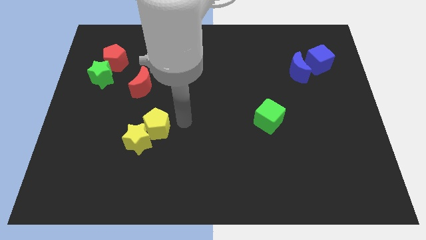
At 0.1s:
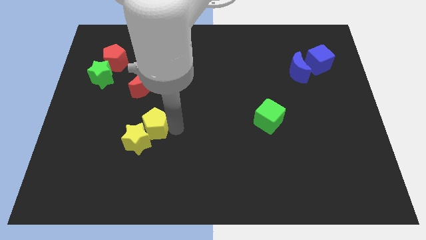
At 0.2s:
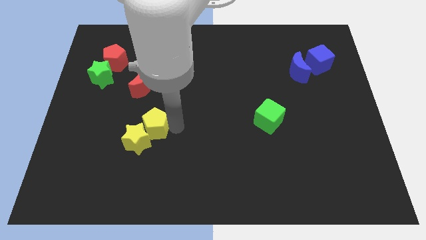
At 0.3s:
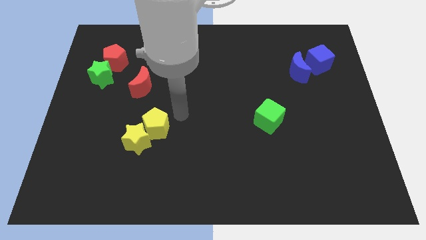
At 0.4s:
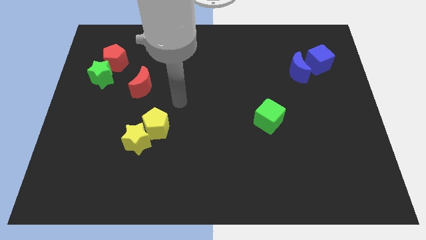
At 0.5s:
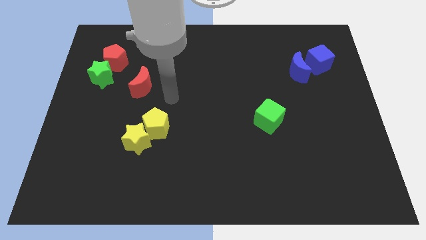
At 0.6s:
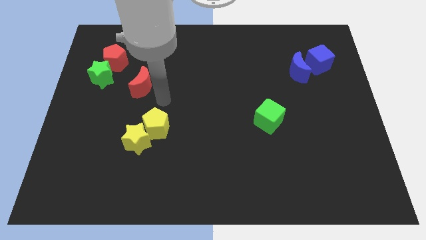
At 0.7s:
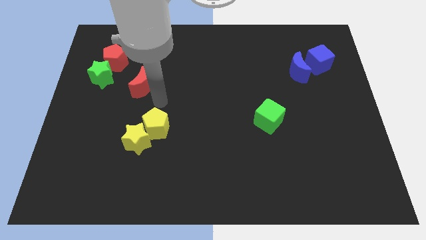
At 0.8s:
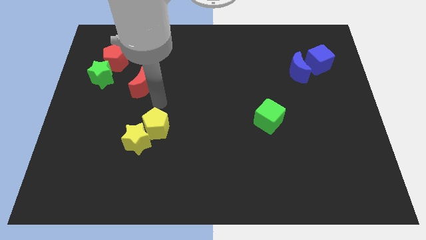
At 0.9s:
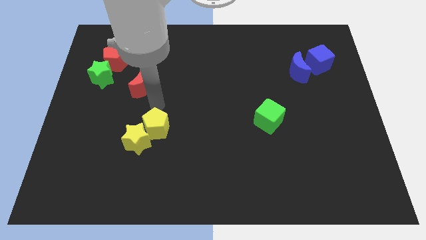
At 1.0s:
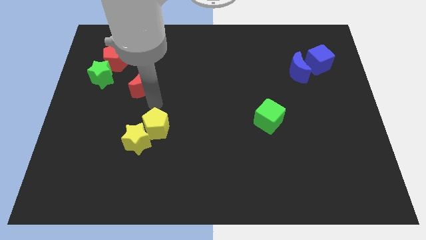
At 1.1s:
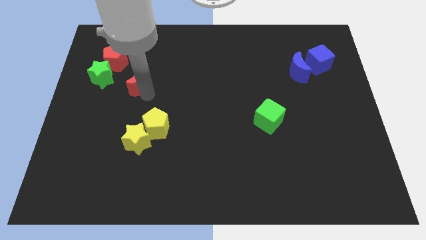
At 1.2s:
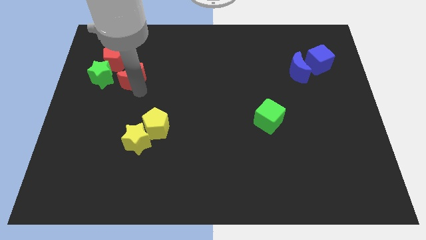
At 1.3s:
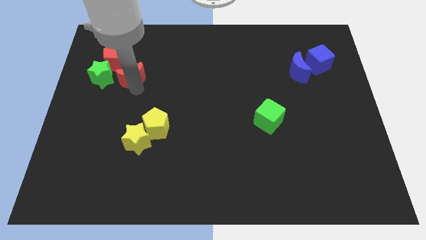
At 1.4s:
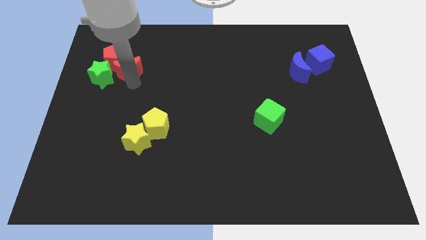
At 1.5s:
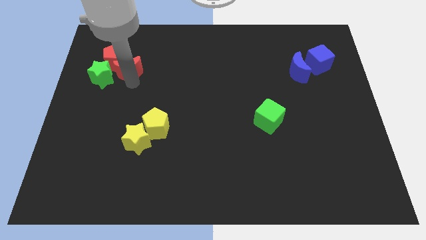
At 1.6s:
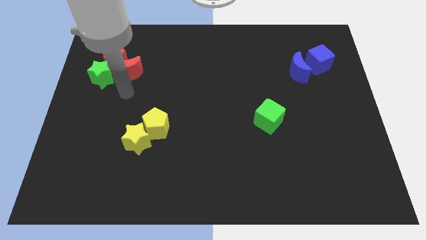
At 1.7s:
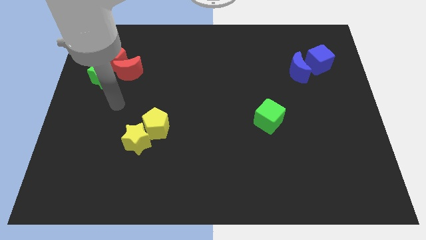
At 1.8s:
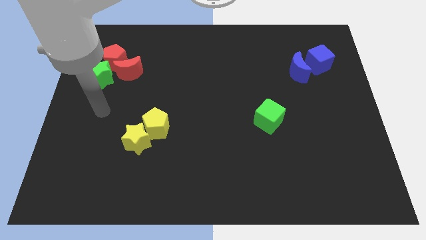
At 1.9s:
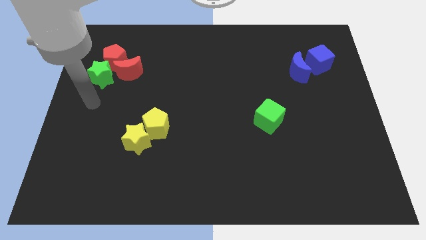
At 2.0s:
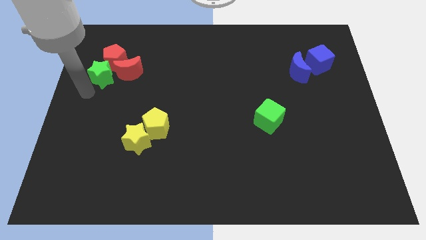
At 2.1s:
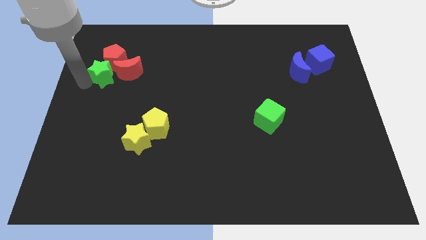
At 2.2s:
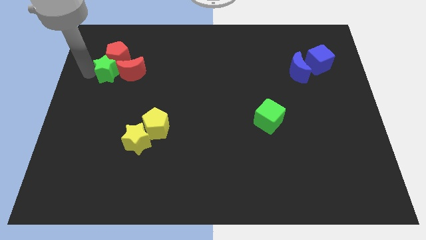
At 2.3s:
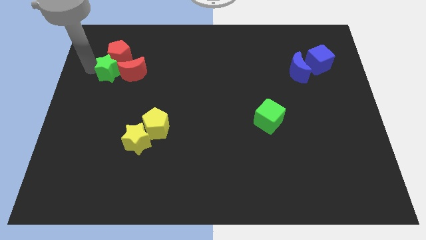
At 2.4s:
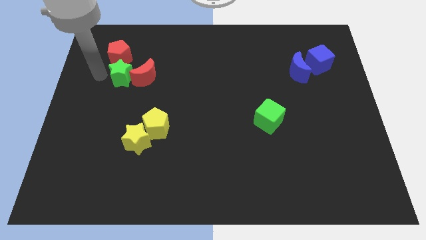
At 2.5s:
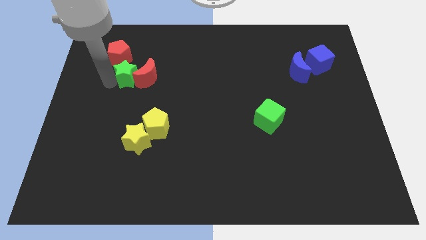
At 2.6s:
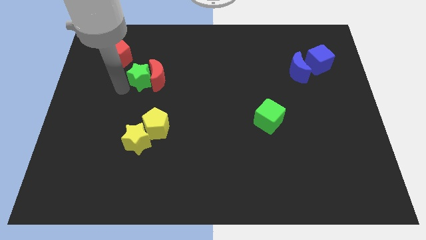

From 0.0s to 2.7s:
push the red moon into the red pentagon

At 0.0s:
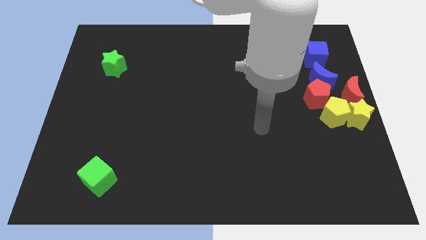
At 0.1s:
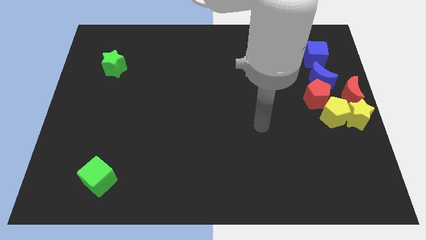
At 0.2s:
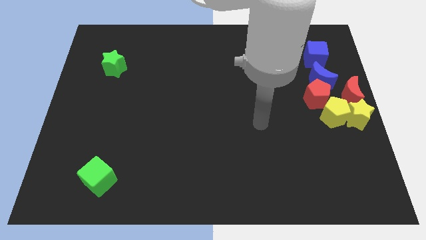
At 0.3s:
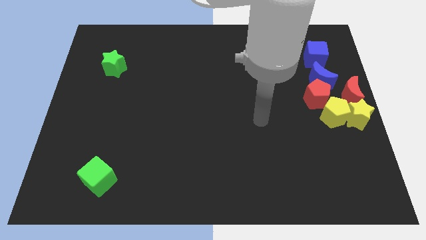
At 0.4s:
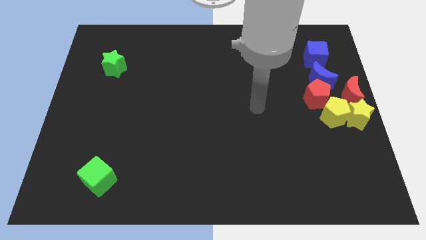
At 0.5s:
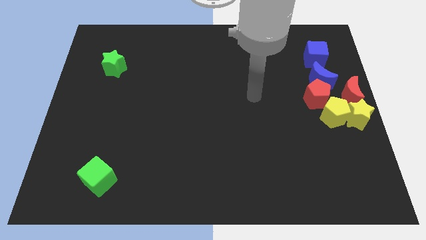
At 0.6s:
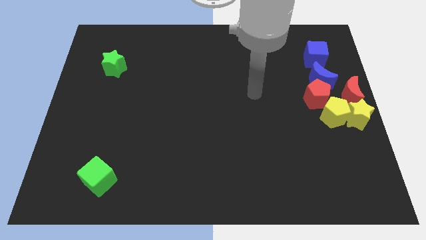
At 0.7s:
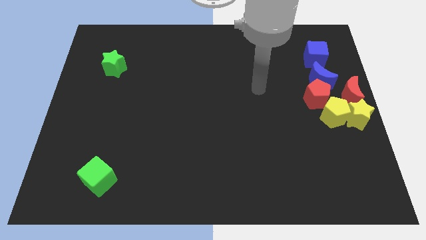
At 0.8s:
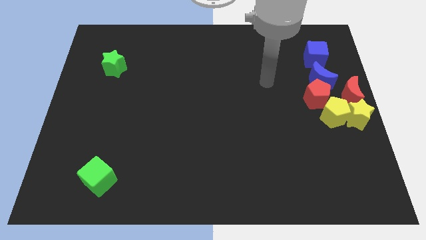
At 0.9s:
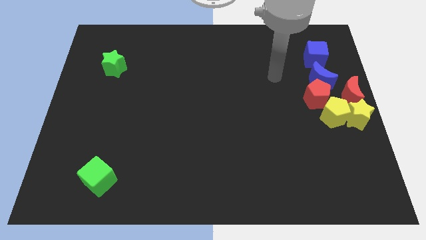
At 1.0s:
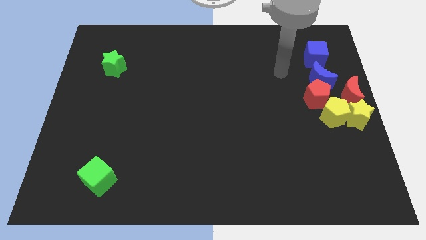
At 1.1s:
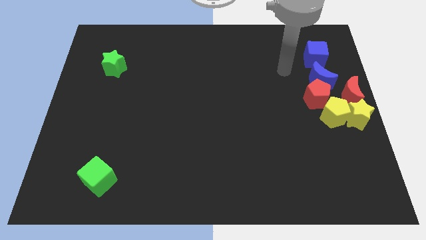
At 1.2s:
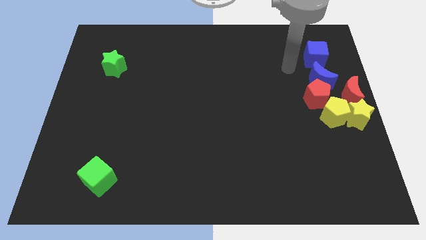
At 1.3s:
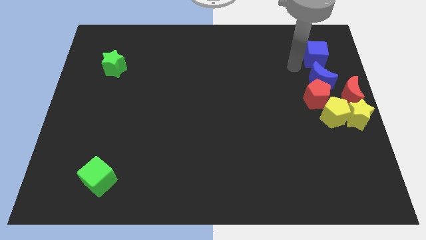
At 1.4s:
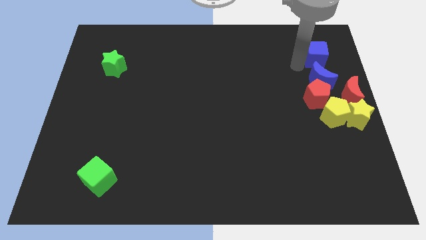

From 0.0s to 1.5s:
place your arm to the bottom left of the blue cube

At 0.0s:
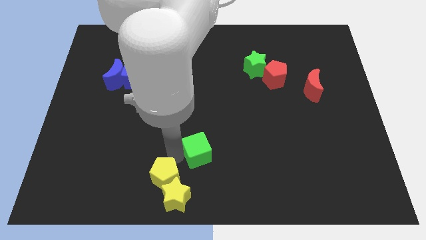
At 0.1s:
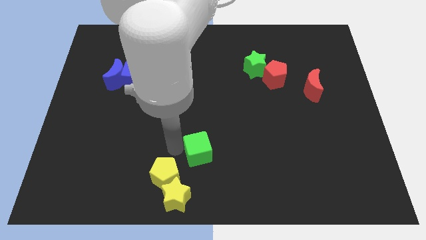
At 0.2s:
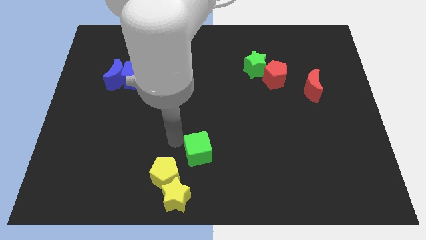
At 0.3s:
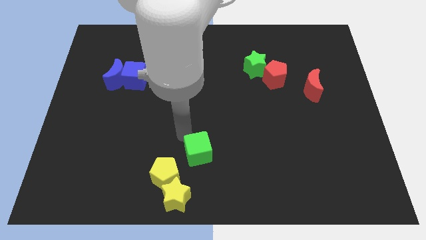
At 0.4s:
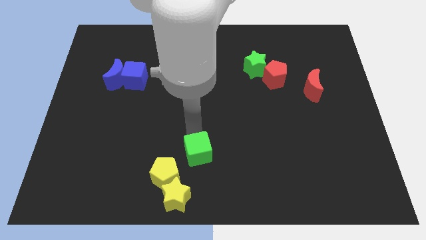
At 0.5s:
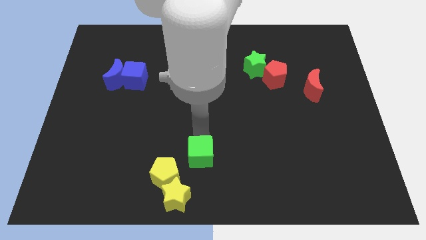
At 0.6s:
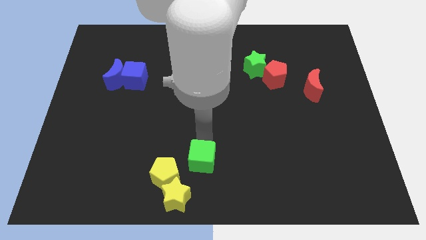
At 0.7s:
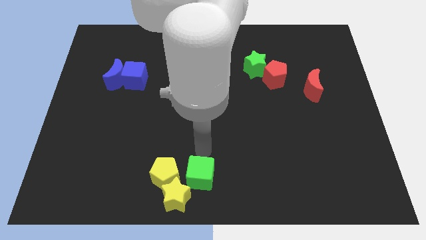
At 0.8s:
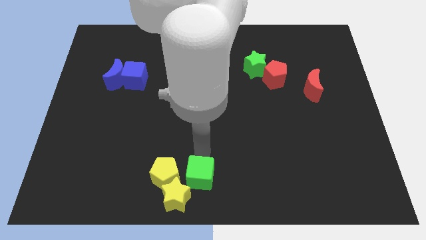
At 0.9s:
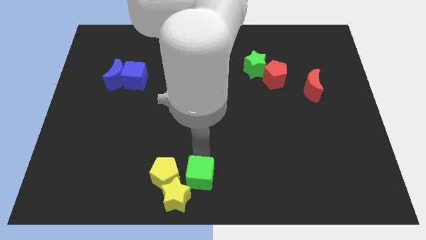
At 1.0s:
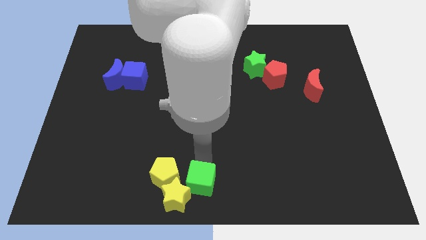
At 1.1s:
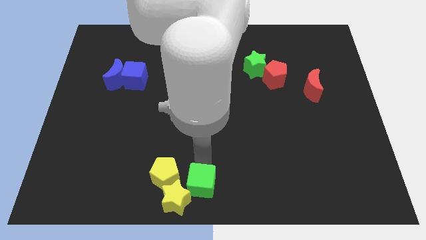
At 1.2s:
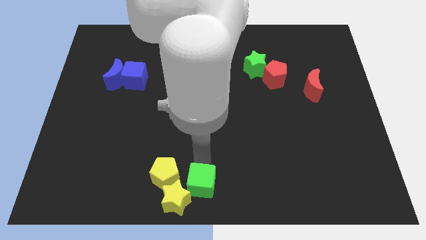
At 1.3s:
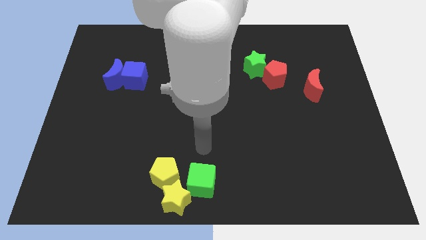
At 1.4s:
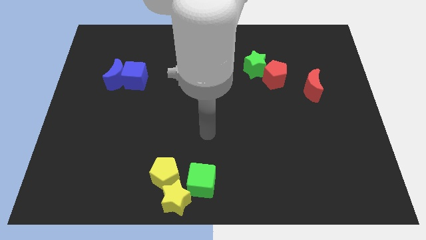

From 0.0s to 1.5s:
push green cube in to yellow star

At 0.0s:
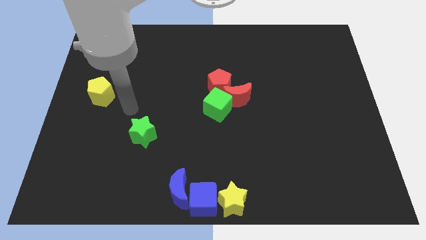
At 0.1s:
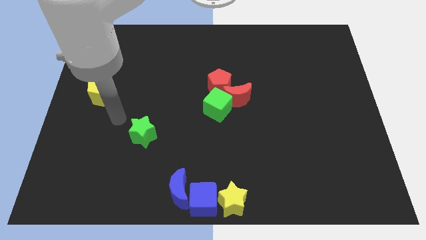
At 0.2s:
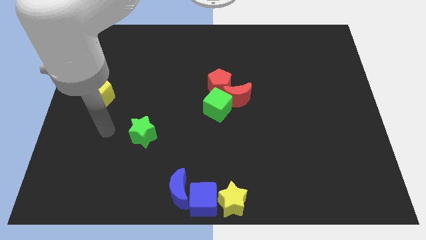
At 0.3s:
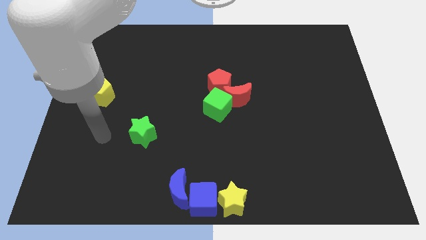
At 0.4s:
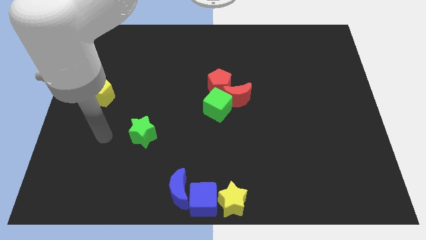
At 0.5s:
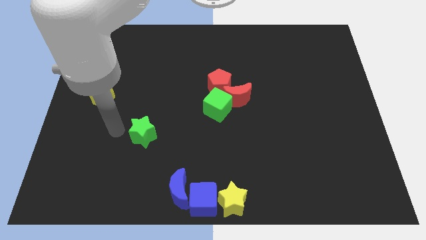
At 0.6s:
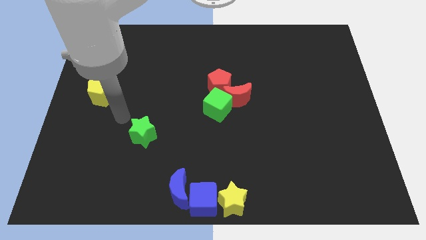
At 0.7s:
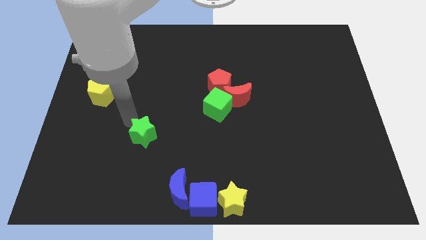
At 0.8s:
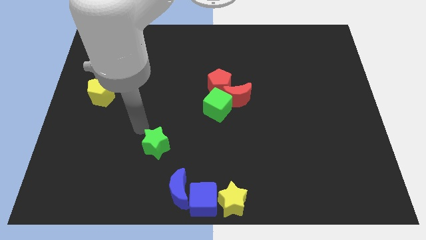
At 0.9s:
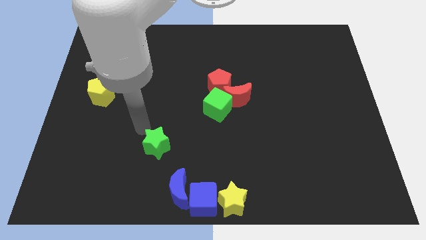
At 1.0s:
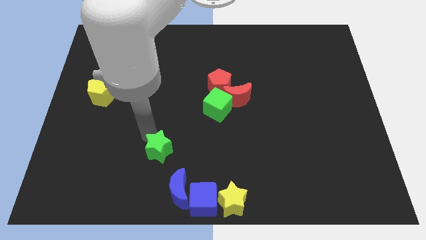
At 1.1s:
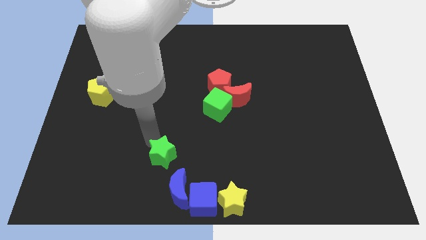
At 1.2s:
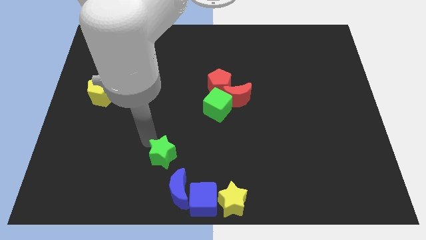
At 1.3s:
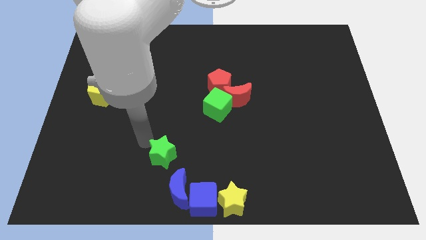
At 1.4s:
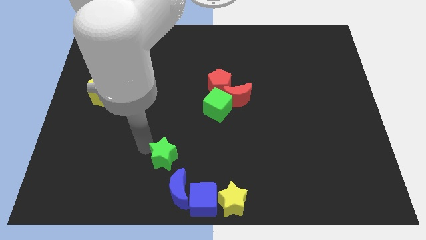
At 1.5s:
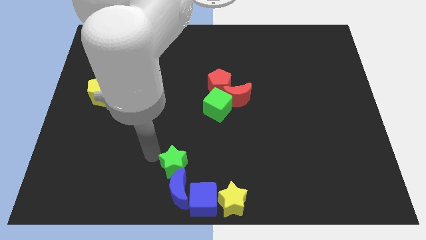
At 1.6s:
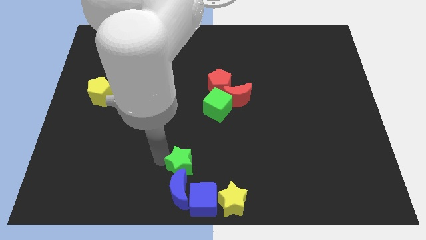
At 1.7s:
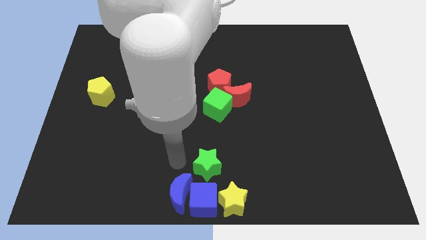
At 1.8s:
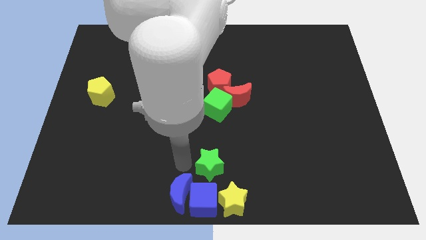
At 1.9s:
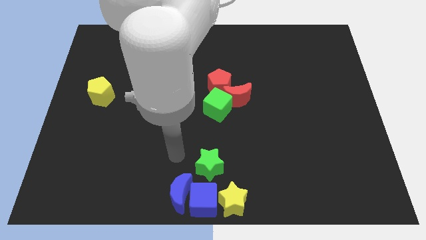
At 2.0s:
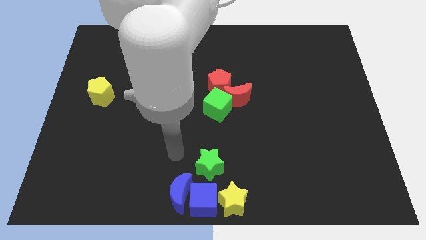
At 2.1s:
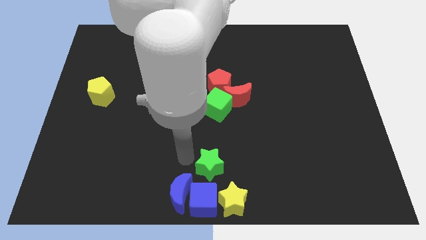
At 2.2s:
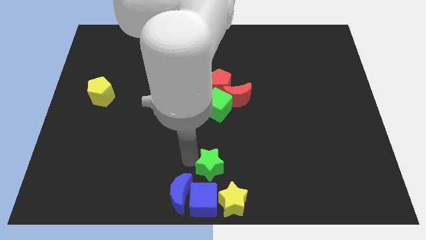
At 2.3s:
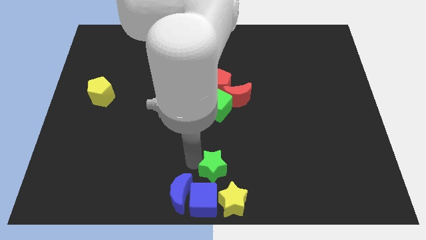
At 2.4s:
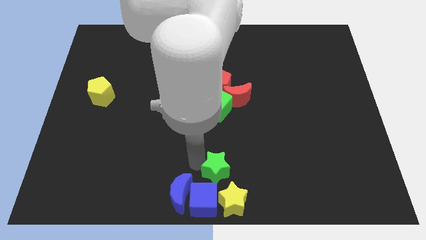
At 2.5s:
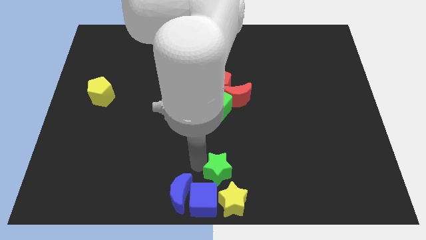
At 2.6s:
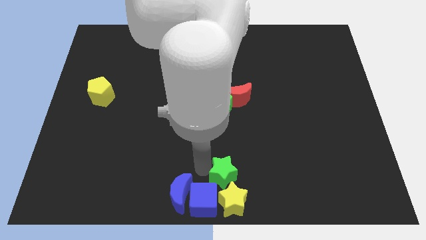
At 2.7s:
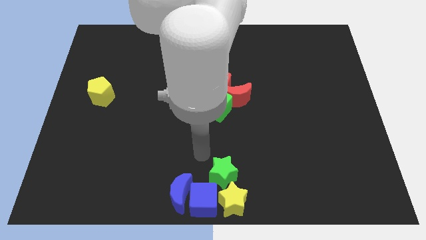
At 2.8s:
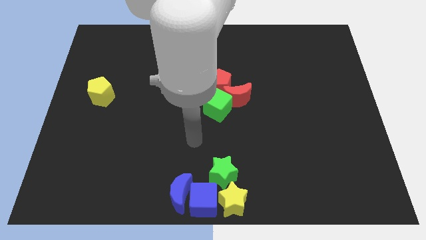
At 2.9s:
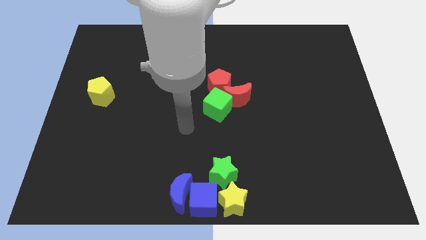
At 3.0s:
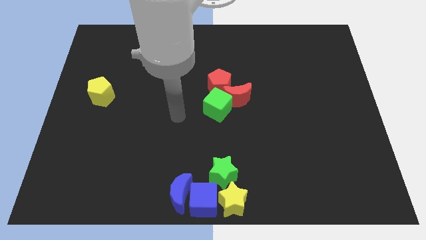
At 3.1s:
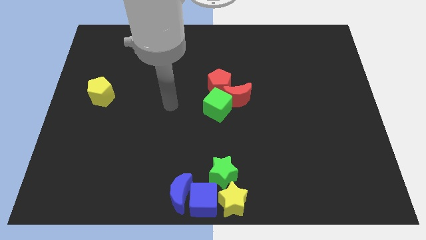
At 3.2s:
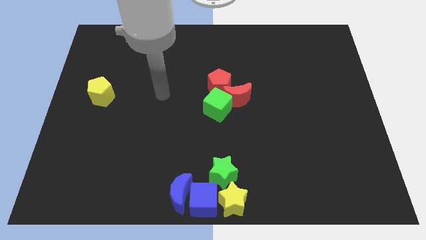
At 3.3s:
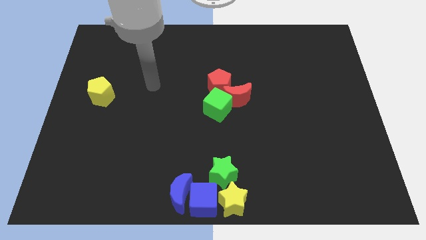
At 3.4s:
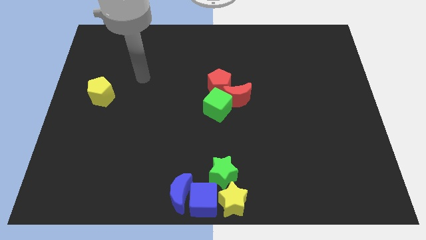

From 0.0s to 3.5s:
move the green star towards the top of the yellow star
